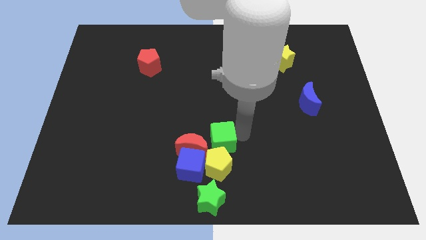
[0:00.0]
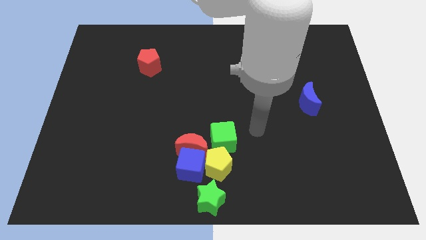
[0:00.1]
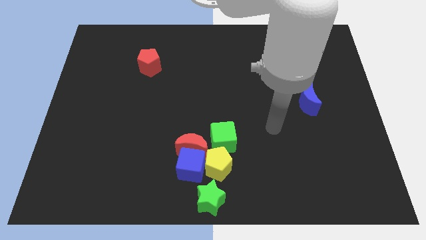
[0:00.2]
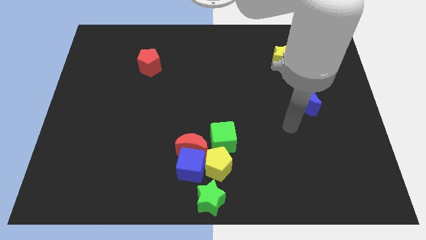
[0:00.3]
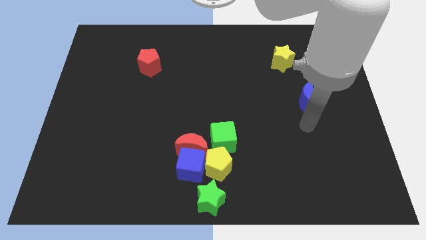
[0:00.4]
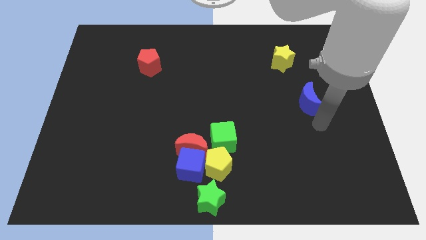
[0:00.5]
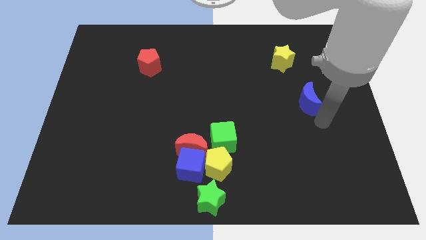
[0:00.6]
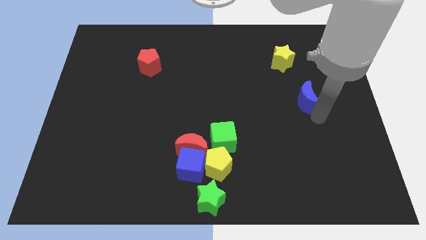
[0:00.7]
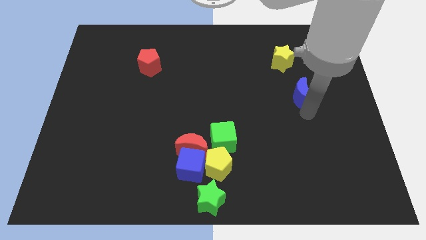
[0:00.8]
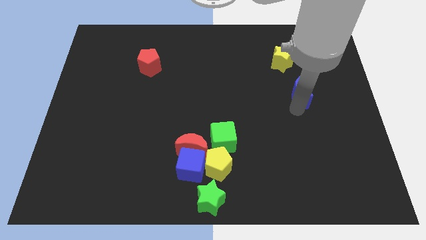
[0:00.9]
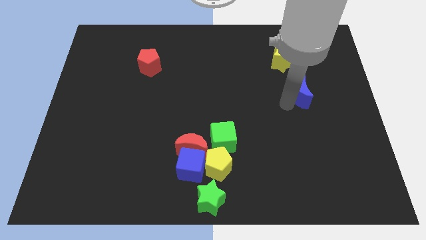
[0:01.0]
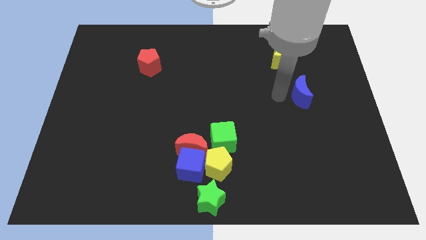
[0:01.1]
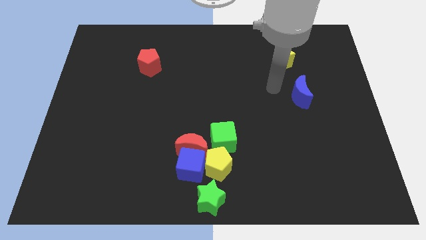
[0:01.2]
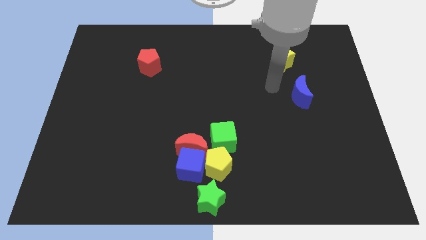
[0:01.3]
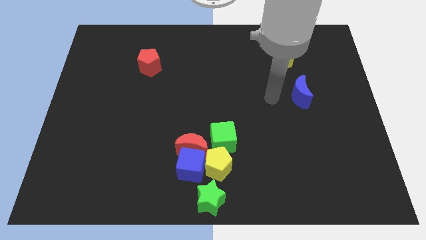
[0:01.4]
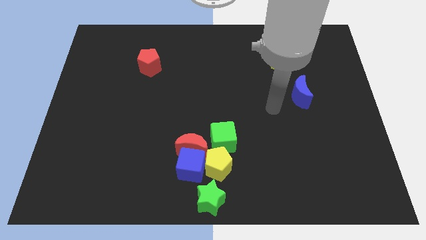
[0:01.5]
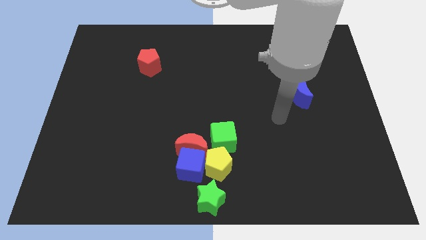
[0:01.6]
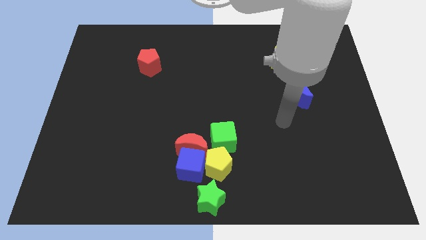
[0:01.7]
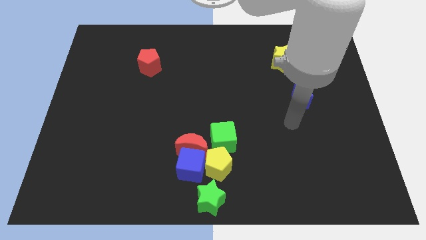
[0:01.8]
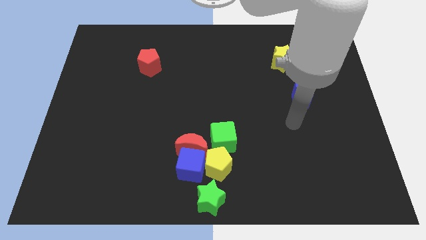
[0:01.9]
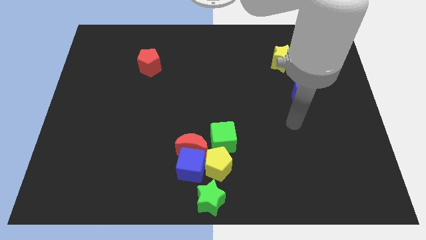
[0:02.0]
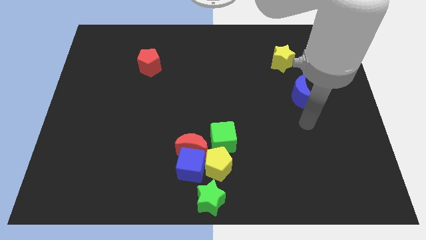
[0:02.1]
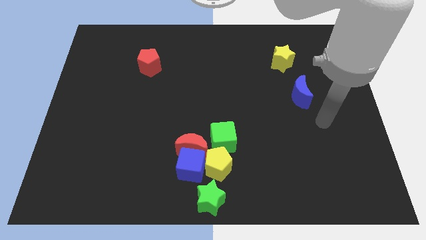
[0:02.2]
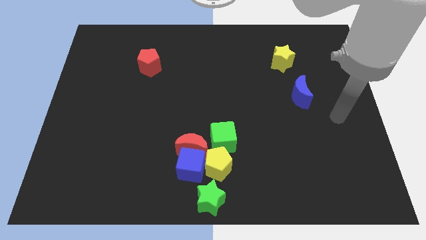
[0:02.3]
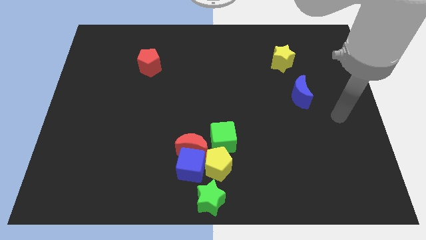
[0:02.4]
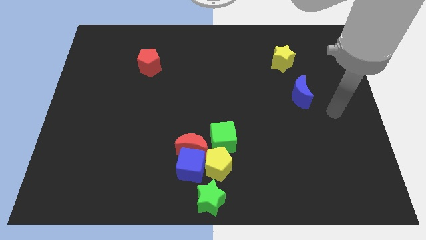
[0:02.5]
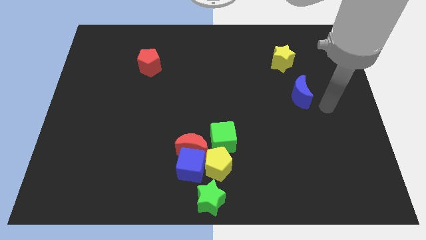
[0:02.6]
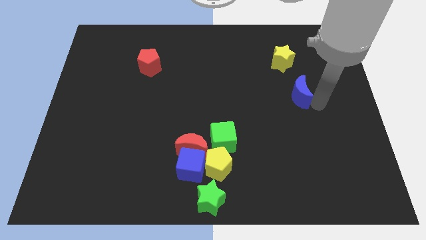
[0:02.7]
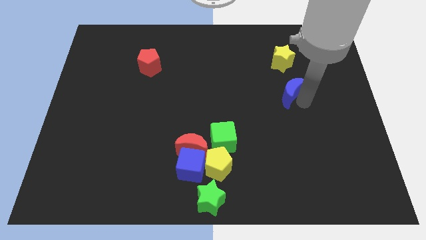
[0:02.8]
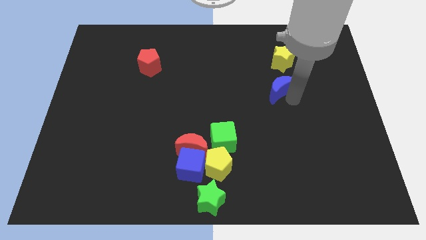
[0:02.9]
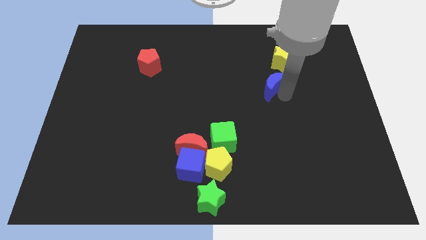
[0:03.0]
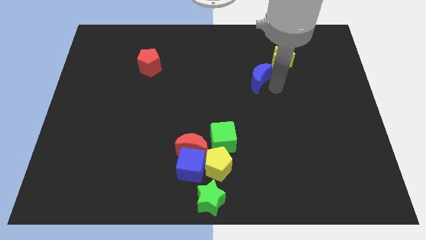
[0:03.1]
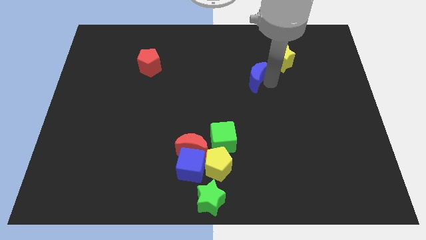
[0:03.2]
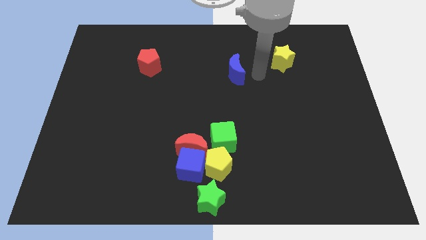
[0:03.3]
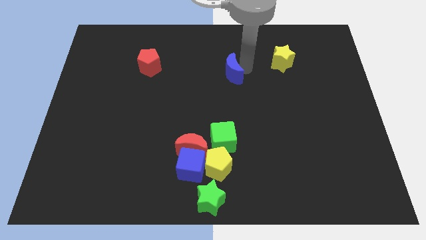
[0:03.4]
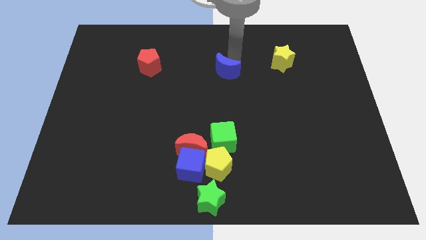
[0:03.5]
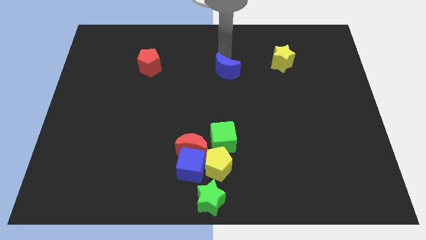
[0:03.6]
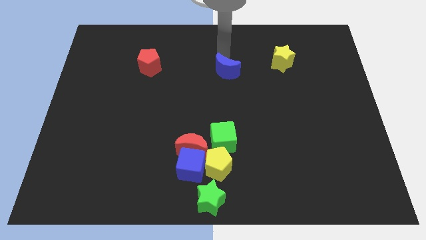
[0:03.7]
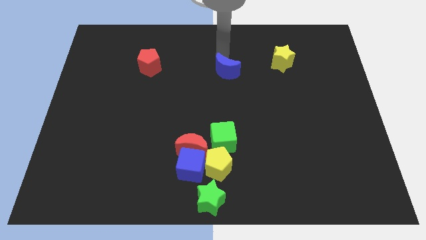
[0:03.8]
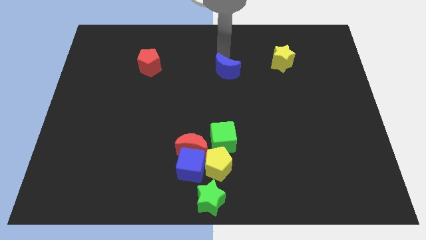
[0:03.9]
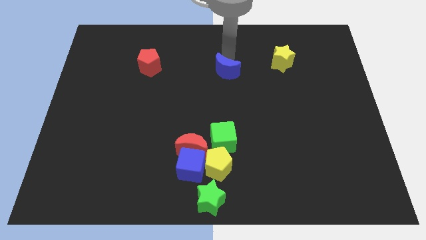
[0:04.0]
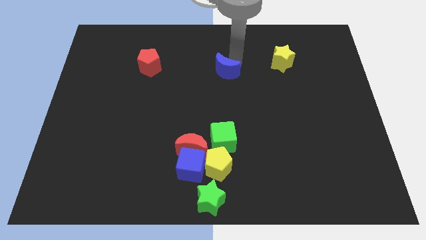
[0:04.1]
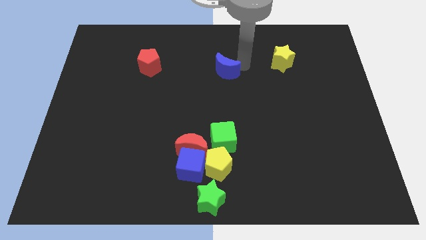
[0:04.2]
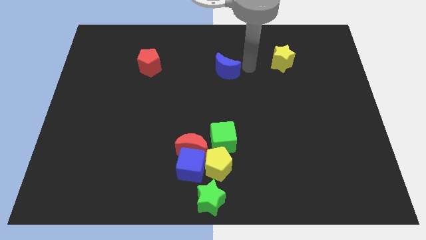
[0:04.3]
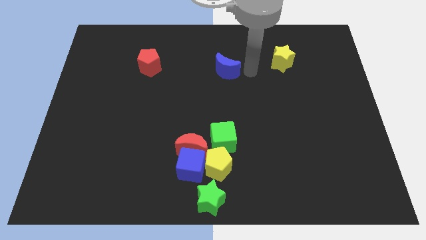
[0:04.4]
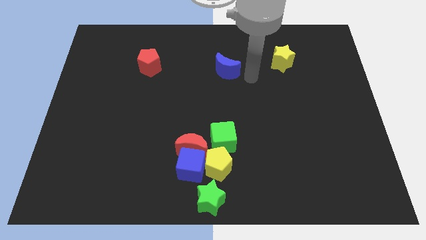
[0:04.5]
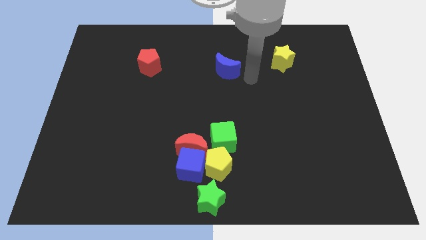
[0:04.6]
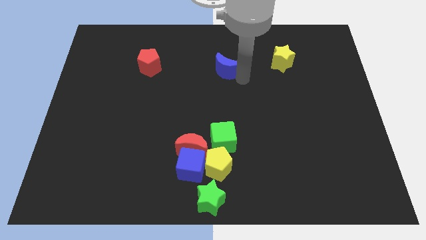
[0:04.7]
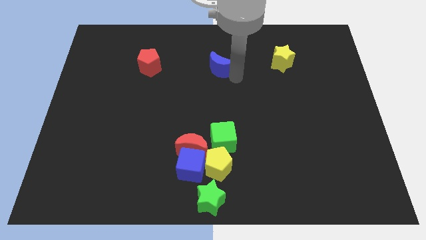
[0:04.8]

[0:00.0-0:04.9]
move the blue moon between the red pentagon and yellow star

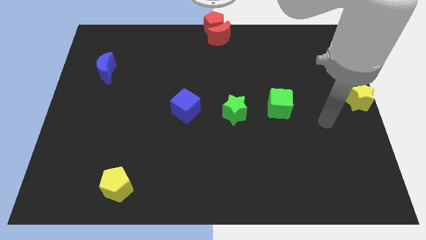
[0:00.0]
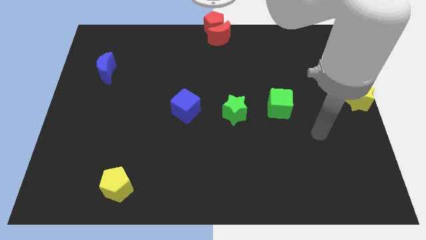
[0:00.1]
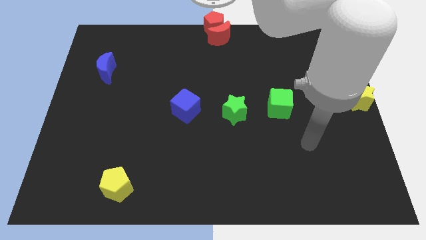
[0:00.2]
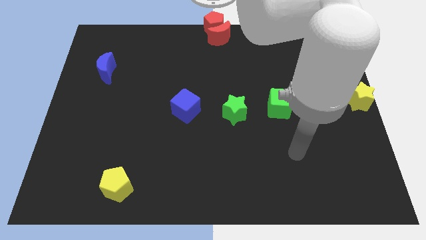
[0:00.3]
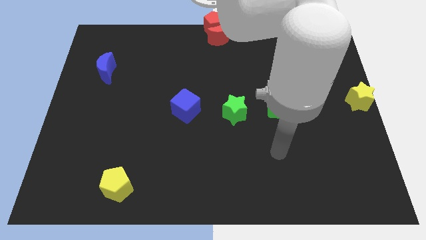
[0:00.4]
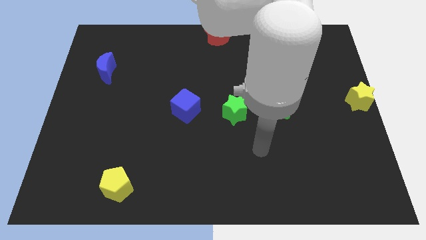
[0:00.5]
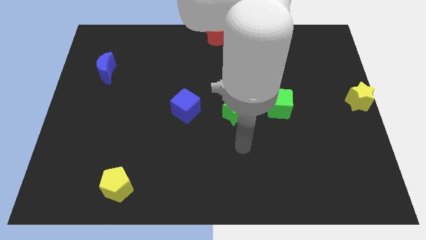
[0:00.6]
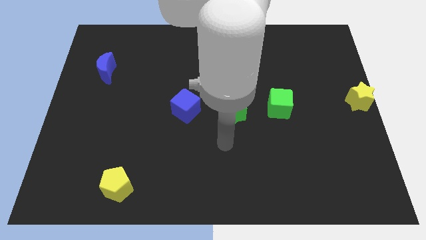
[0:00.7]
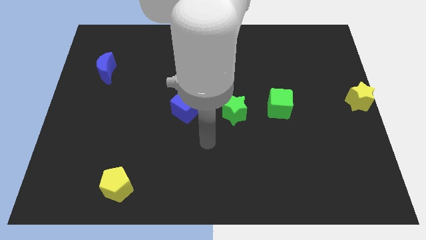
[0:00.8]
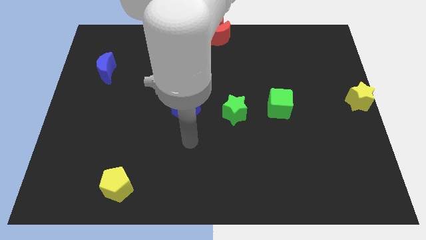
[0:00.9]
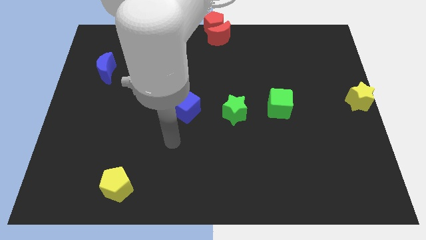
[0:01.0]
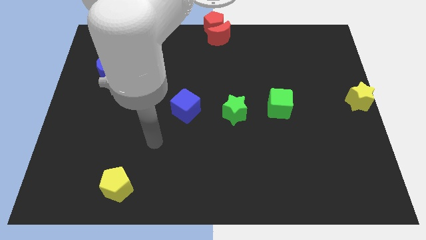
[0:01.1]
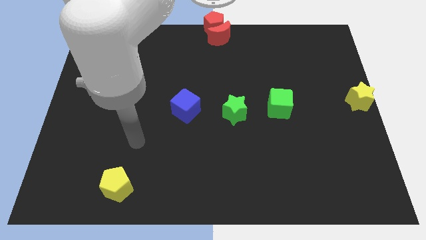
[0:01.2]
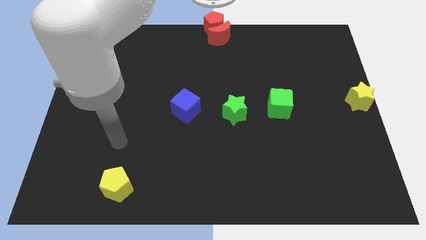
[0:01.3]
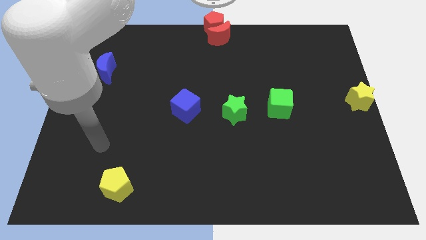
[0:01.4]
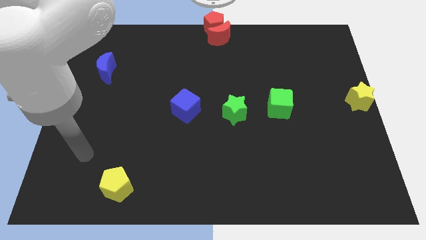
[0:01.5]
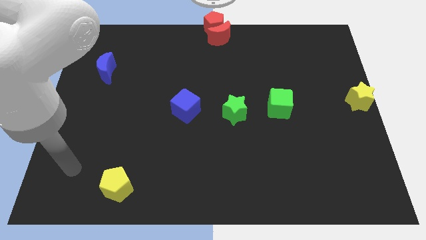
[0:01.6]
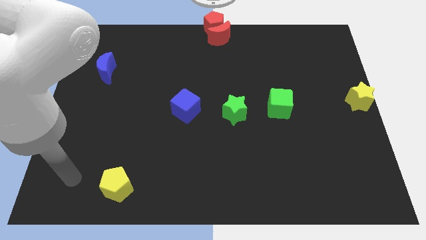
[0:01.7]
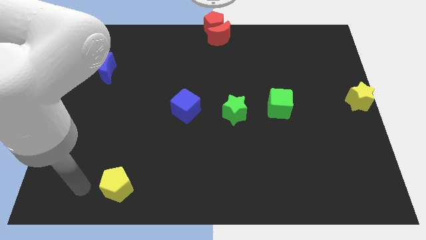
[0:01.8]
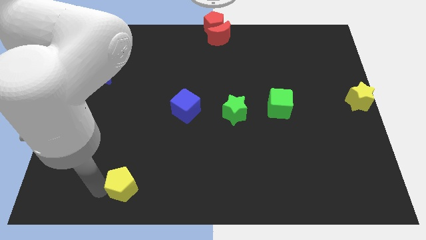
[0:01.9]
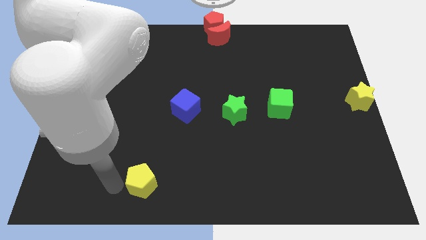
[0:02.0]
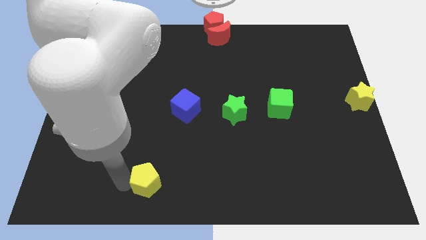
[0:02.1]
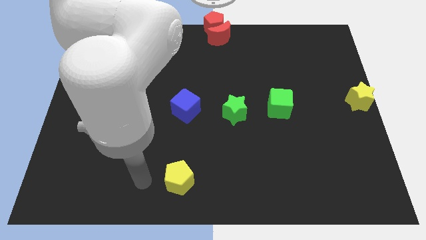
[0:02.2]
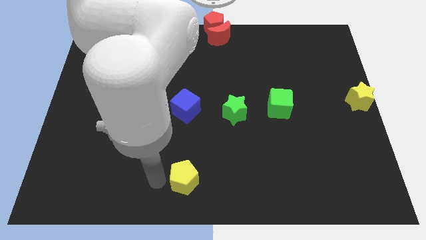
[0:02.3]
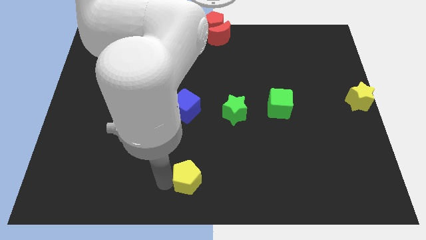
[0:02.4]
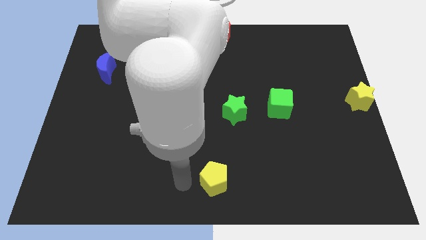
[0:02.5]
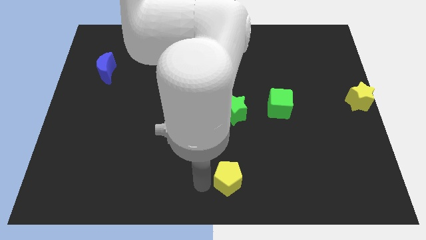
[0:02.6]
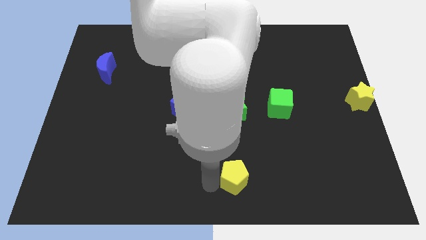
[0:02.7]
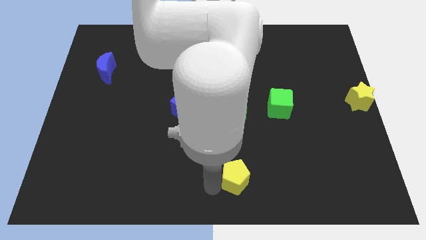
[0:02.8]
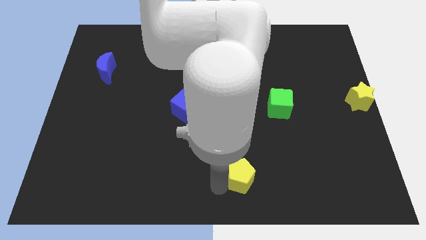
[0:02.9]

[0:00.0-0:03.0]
push the yellow pentagon towards the right side of the board

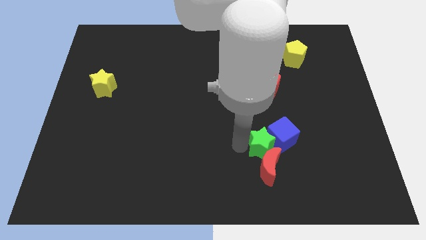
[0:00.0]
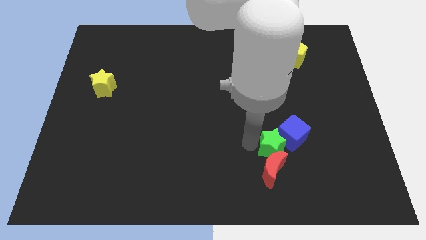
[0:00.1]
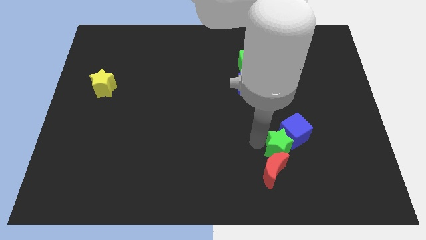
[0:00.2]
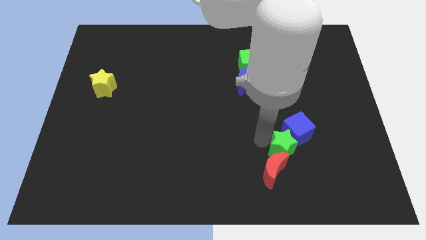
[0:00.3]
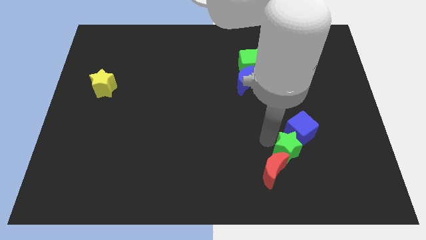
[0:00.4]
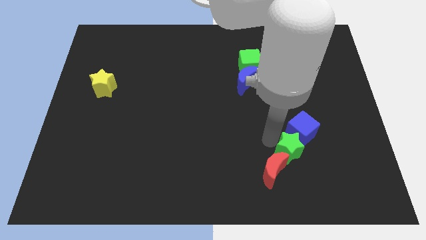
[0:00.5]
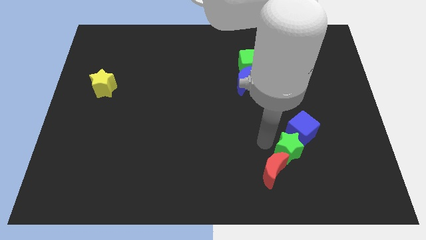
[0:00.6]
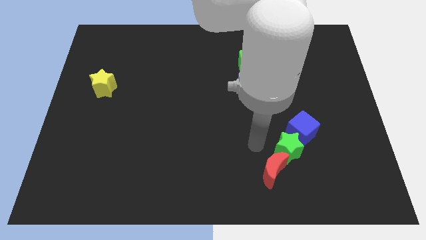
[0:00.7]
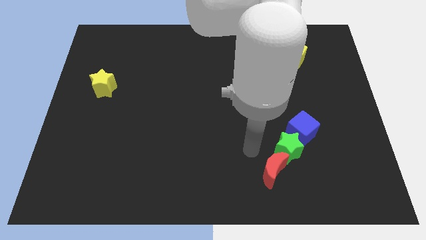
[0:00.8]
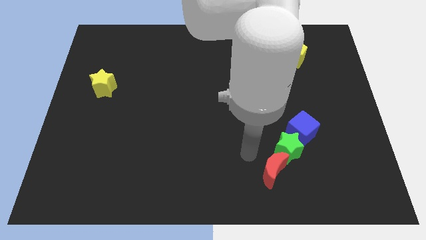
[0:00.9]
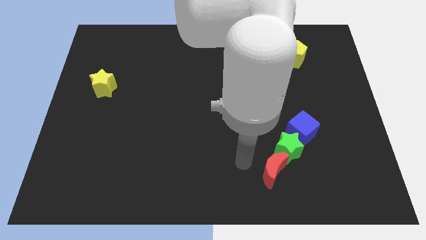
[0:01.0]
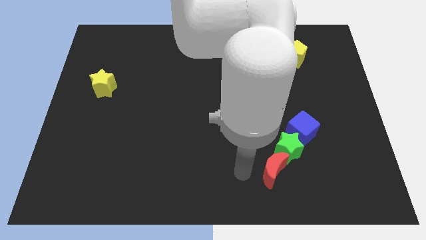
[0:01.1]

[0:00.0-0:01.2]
place the green star in between the blue cube and the red crescent
